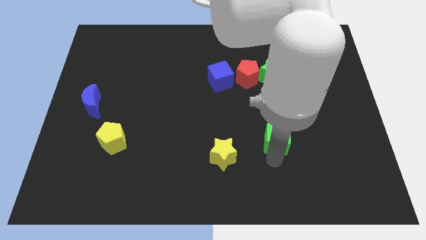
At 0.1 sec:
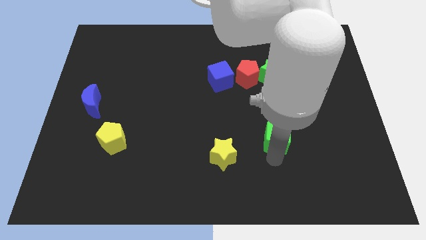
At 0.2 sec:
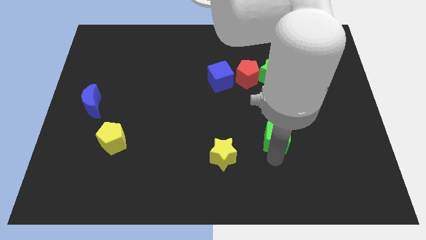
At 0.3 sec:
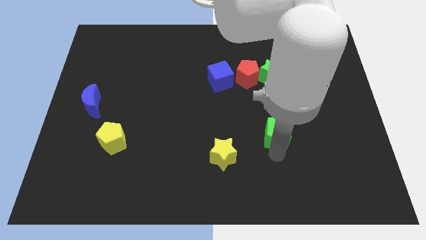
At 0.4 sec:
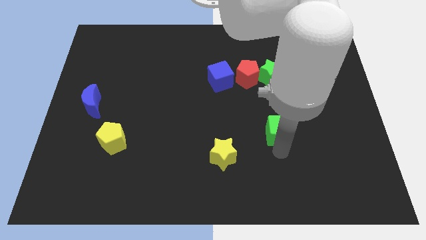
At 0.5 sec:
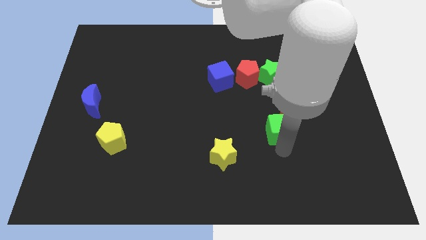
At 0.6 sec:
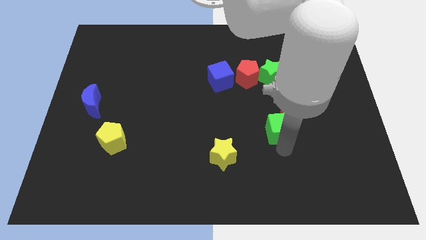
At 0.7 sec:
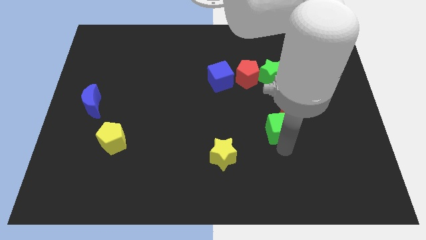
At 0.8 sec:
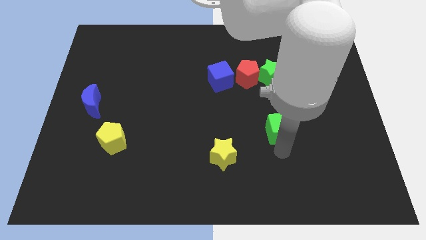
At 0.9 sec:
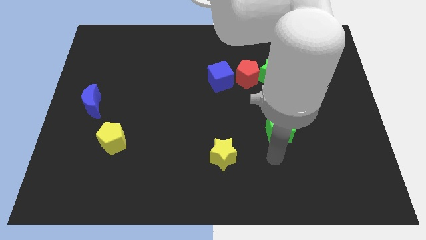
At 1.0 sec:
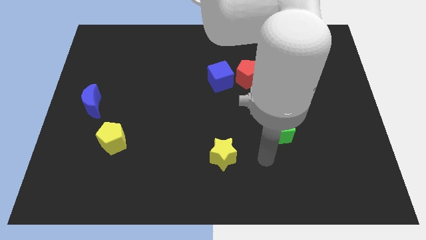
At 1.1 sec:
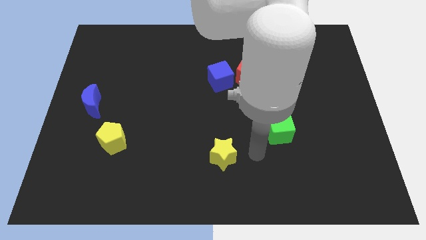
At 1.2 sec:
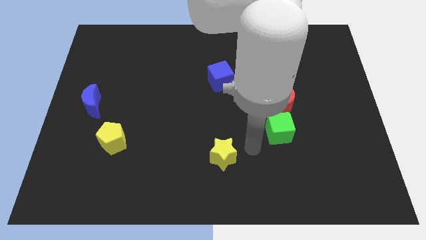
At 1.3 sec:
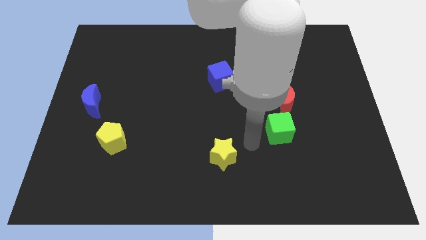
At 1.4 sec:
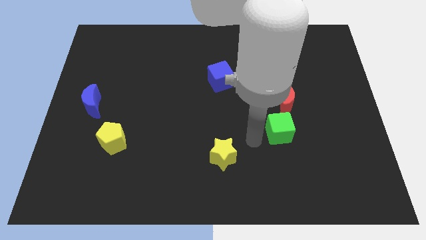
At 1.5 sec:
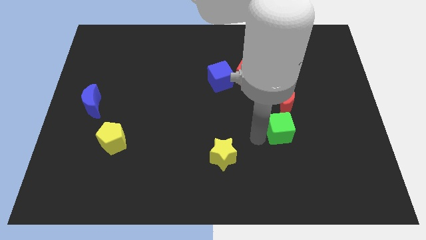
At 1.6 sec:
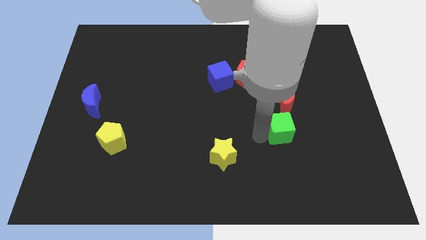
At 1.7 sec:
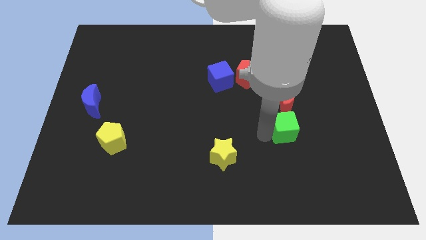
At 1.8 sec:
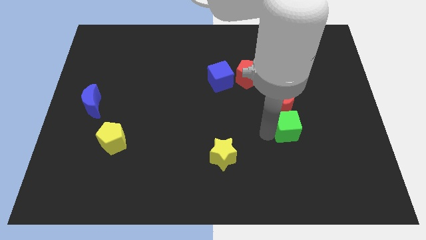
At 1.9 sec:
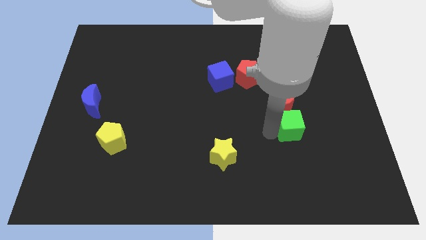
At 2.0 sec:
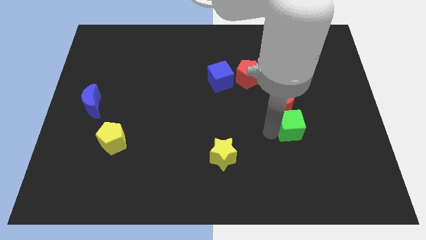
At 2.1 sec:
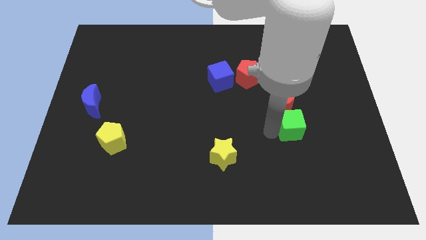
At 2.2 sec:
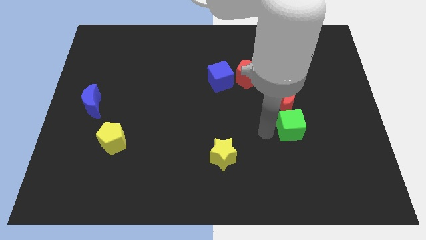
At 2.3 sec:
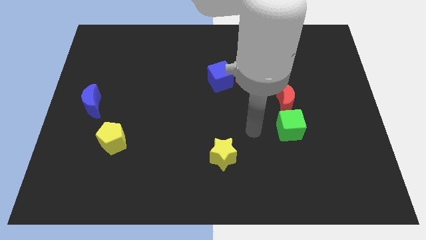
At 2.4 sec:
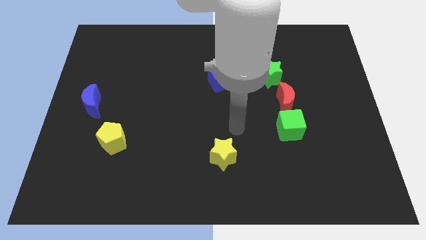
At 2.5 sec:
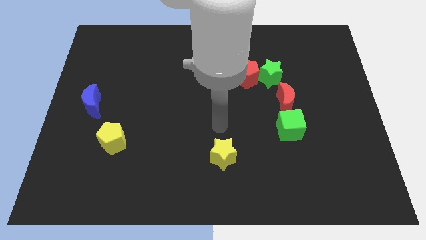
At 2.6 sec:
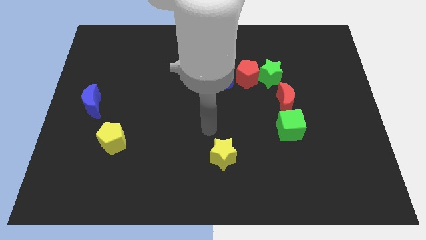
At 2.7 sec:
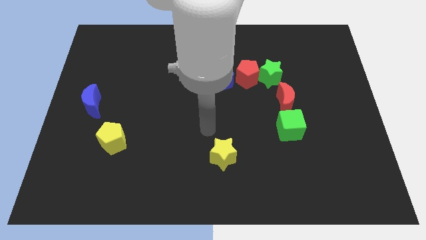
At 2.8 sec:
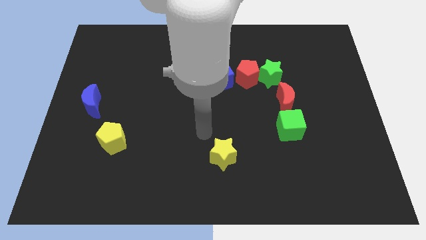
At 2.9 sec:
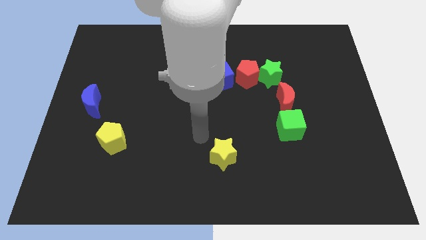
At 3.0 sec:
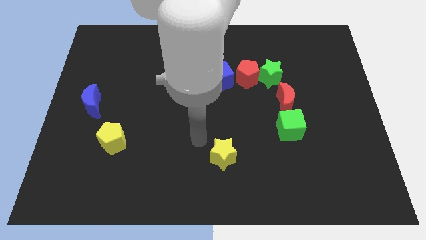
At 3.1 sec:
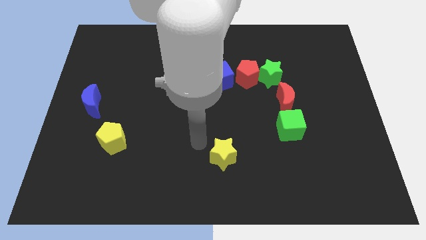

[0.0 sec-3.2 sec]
put the green cube to the bottom side of the red moon

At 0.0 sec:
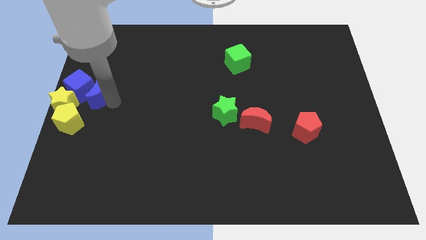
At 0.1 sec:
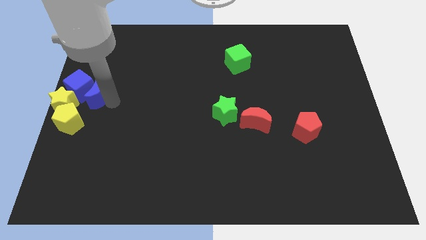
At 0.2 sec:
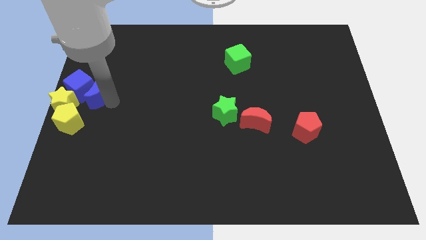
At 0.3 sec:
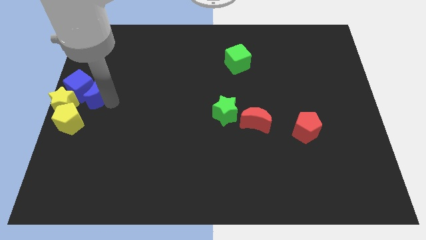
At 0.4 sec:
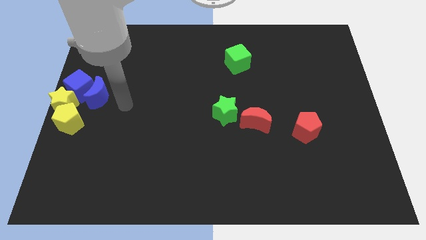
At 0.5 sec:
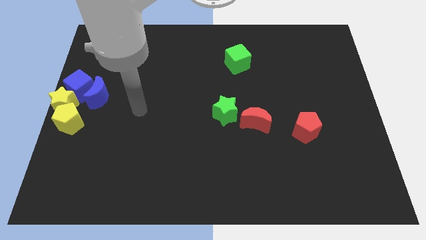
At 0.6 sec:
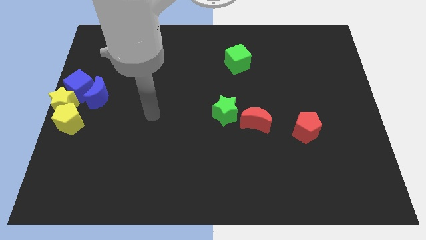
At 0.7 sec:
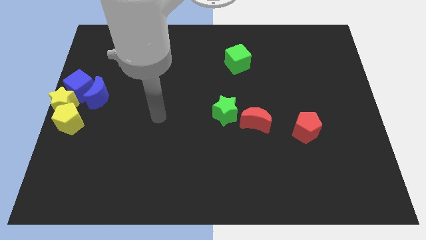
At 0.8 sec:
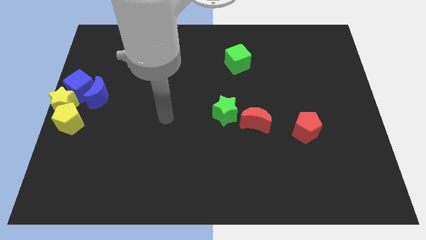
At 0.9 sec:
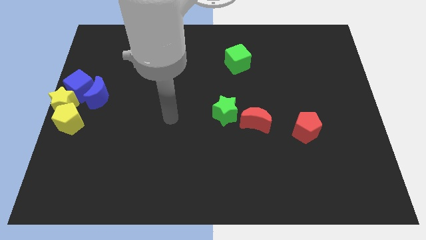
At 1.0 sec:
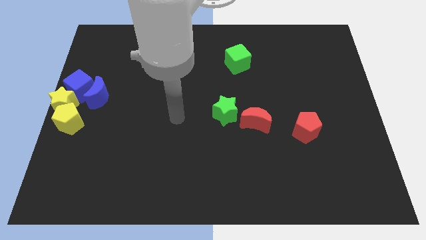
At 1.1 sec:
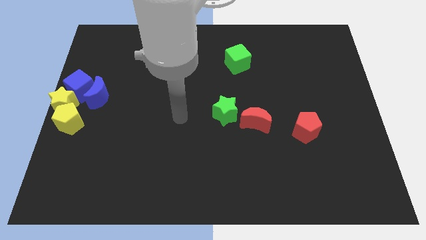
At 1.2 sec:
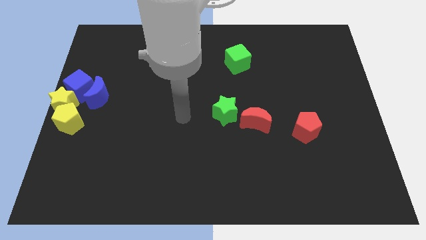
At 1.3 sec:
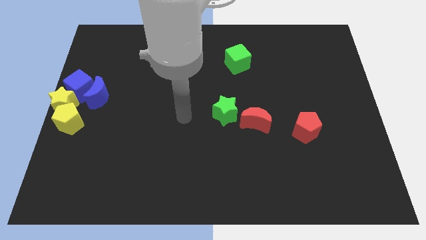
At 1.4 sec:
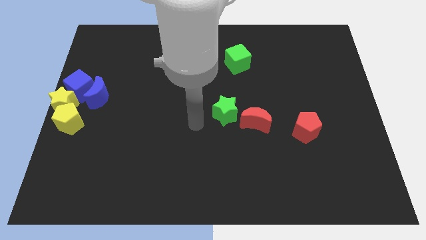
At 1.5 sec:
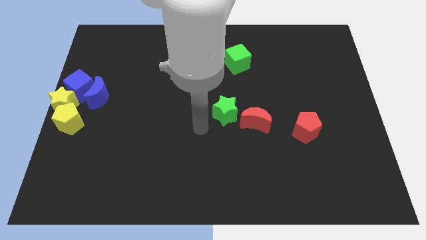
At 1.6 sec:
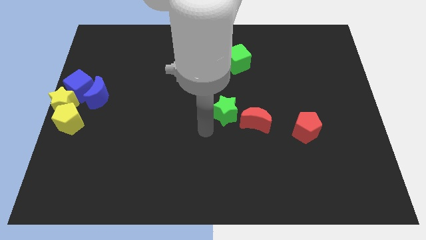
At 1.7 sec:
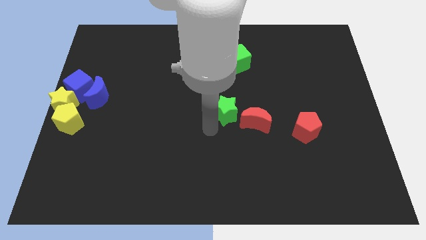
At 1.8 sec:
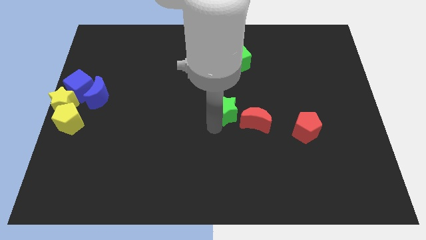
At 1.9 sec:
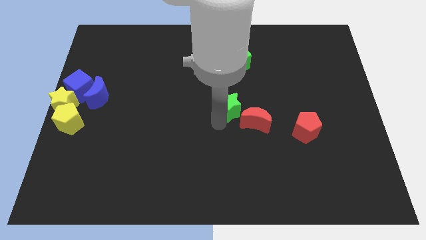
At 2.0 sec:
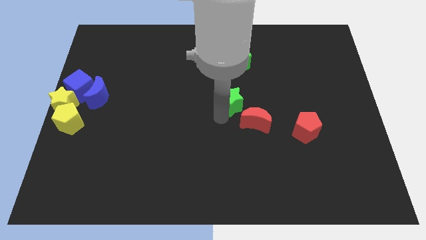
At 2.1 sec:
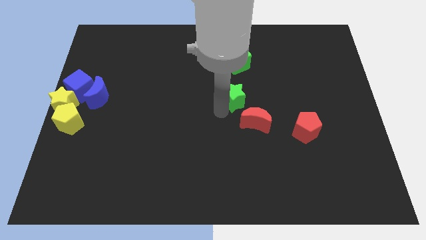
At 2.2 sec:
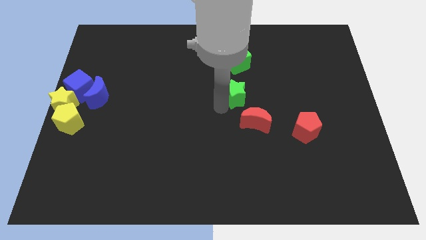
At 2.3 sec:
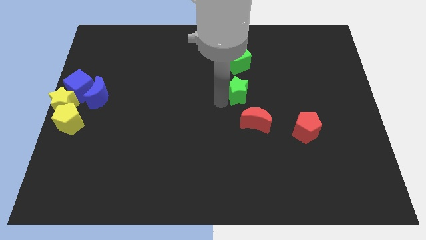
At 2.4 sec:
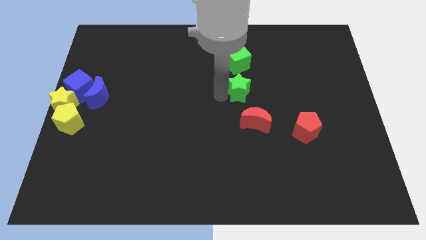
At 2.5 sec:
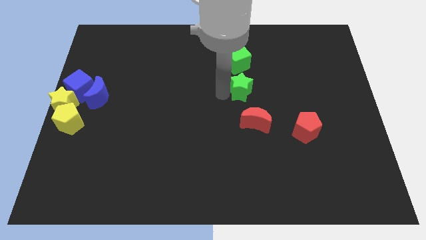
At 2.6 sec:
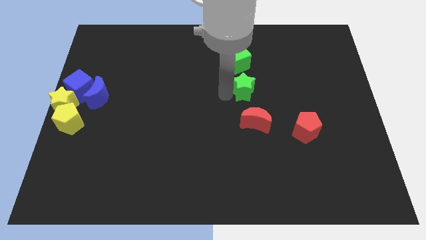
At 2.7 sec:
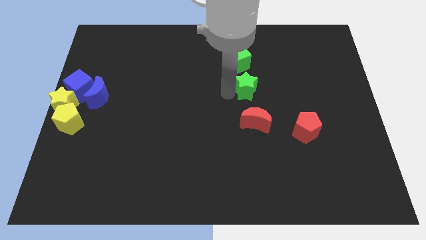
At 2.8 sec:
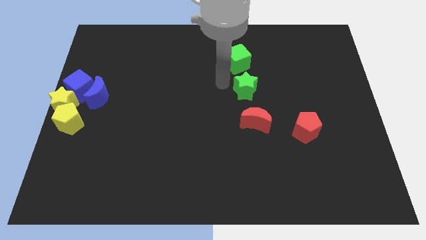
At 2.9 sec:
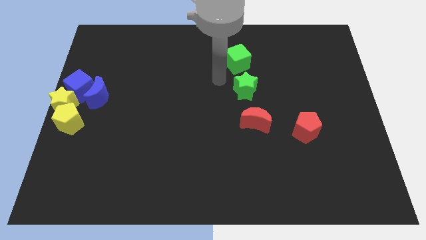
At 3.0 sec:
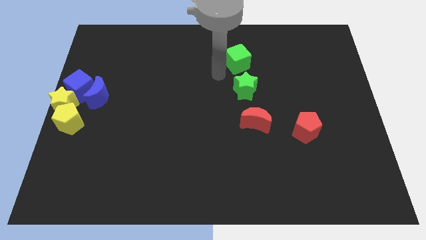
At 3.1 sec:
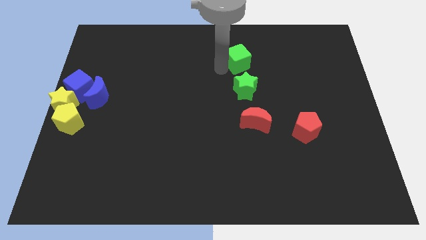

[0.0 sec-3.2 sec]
place the green star down to the green cube

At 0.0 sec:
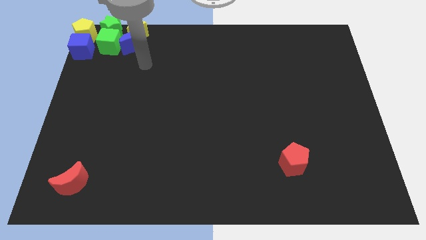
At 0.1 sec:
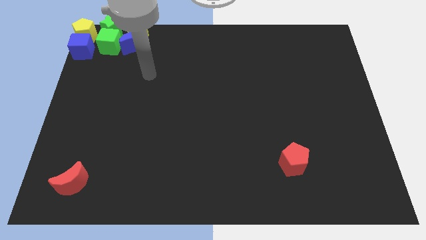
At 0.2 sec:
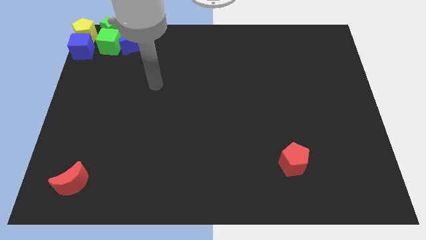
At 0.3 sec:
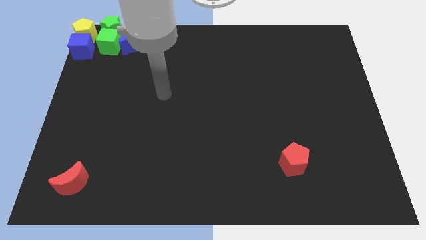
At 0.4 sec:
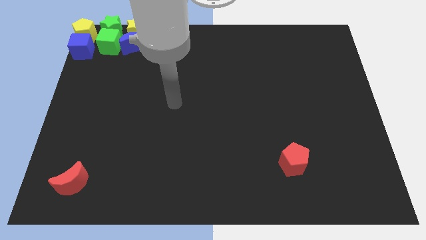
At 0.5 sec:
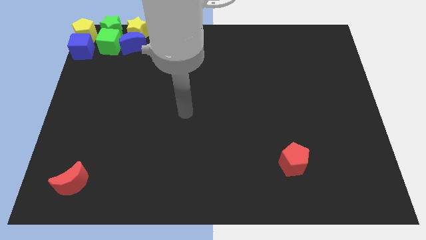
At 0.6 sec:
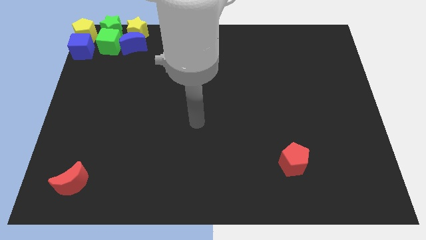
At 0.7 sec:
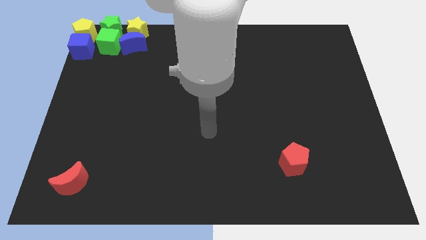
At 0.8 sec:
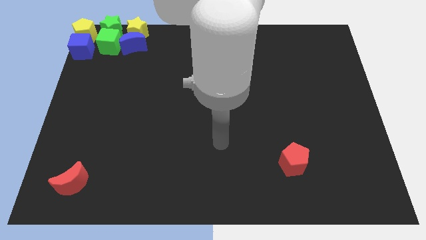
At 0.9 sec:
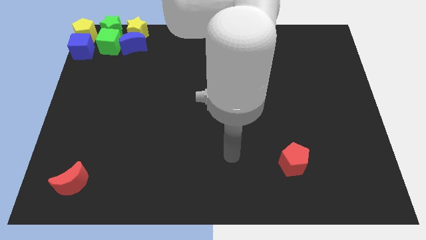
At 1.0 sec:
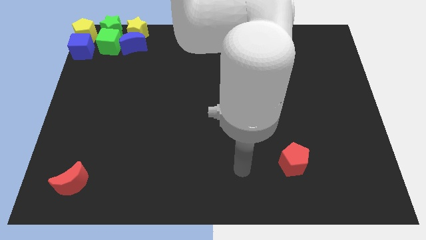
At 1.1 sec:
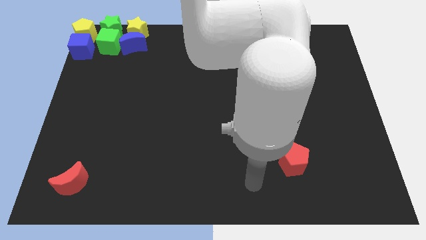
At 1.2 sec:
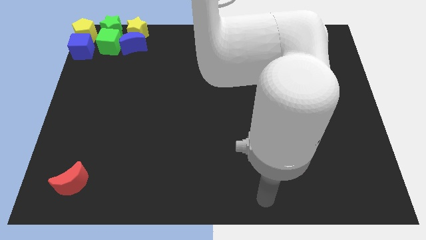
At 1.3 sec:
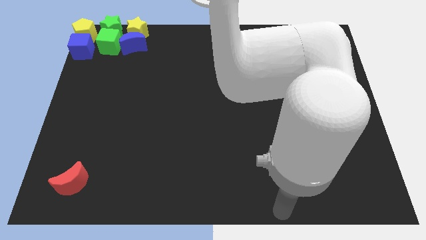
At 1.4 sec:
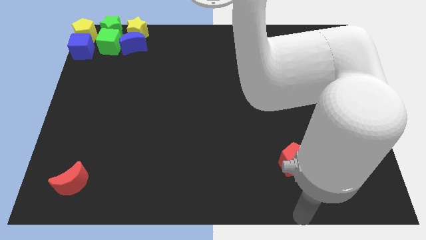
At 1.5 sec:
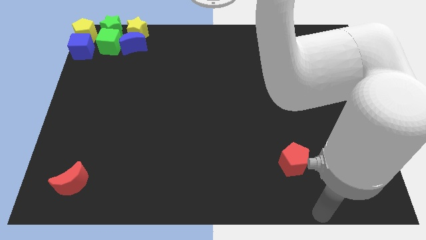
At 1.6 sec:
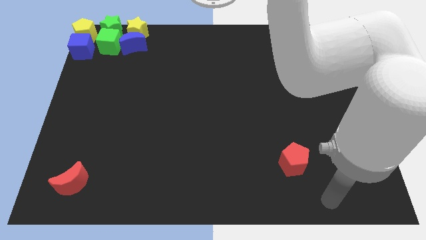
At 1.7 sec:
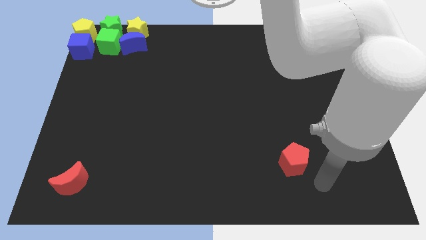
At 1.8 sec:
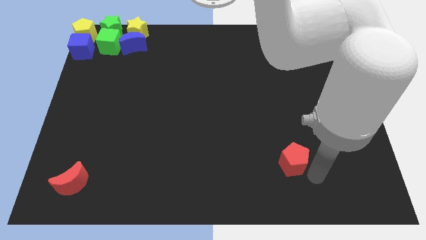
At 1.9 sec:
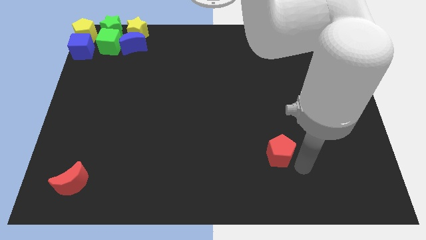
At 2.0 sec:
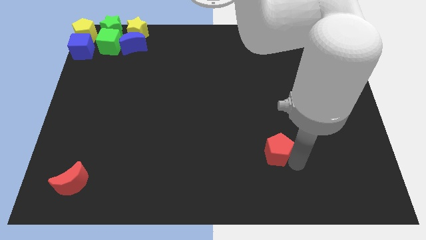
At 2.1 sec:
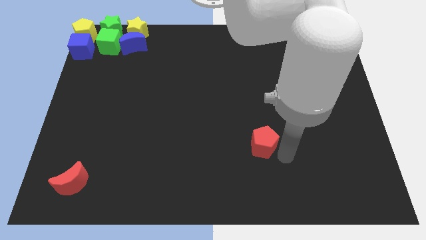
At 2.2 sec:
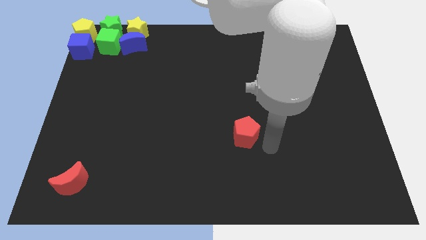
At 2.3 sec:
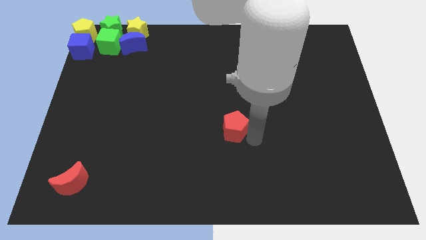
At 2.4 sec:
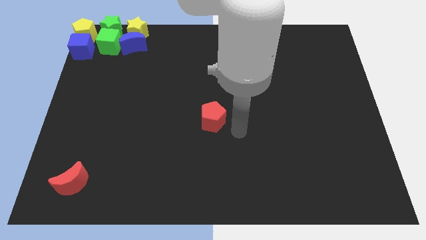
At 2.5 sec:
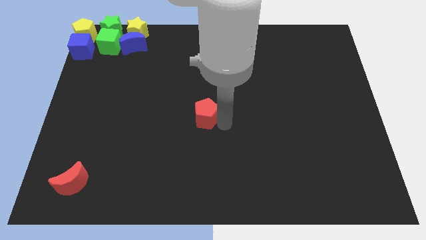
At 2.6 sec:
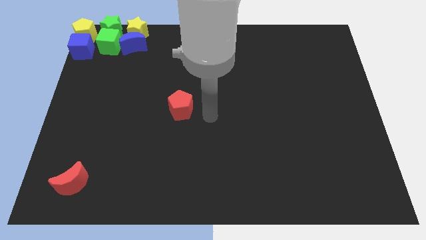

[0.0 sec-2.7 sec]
move the red pentagon to the center of the board
